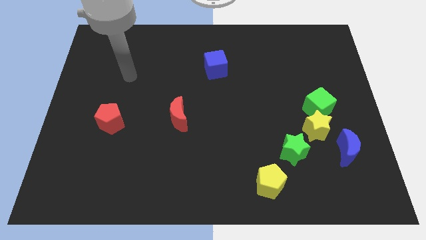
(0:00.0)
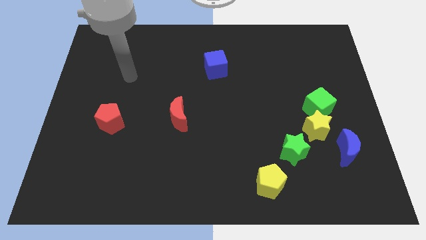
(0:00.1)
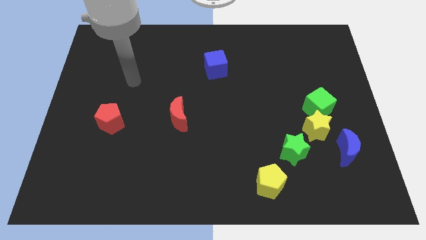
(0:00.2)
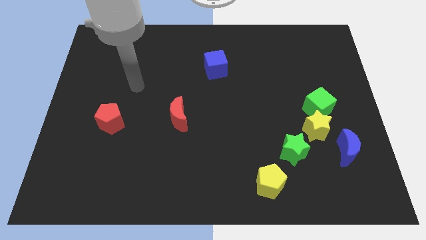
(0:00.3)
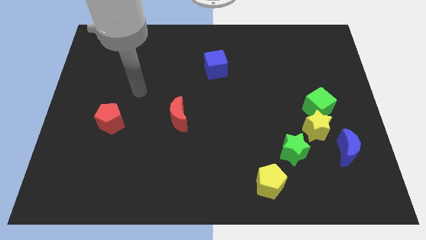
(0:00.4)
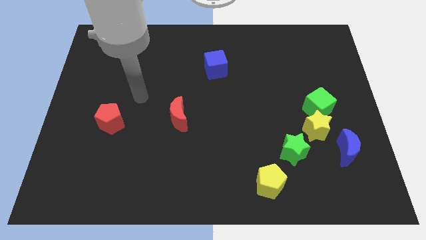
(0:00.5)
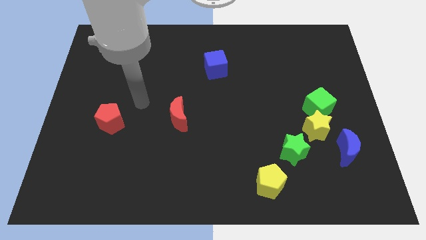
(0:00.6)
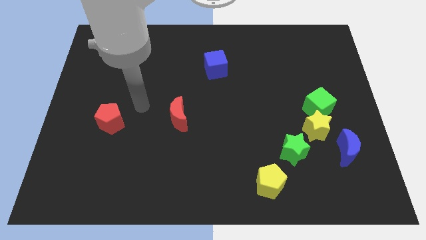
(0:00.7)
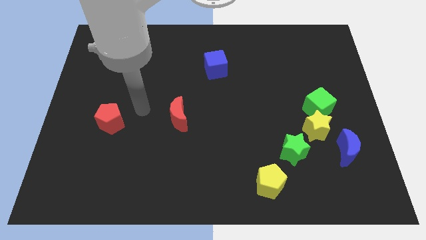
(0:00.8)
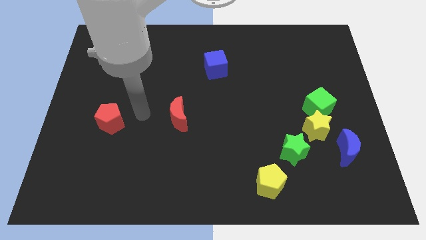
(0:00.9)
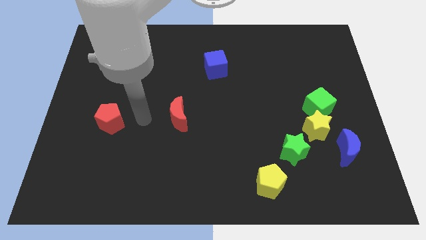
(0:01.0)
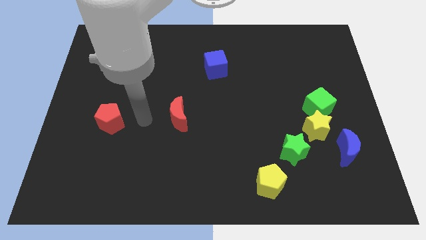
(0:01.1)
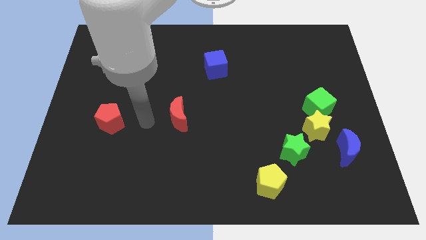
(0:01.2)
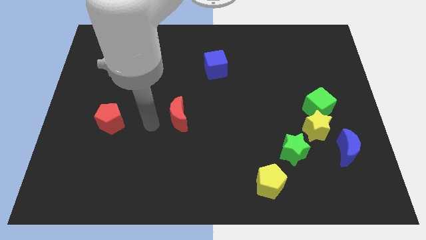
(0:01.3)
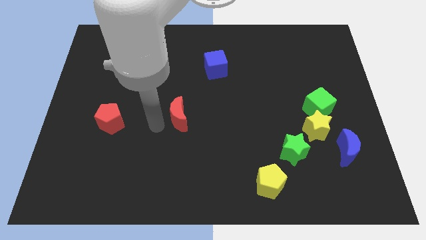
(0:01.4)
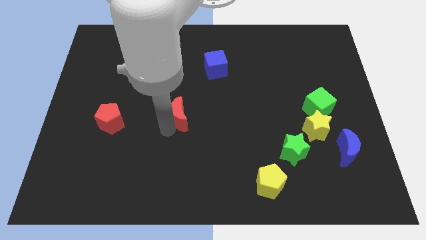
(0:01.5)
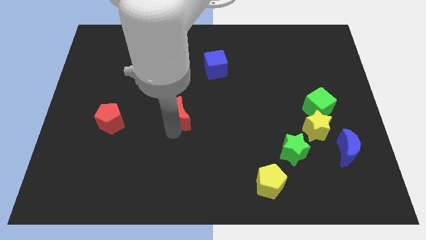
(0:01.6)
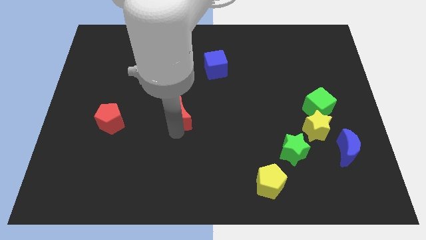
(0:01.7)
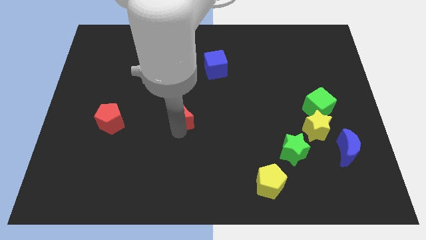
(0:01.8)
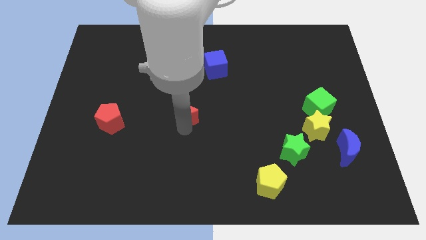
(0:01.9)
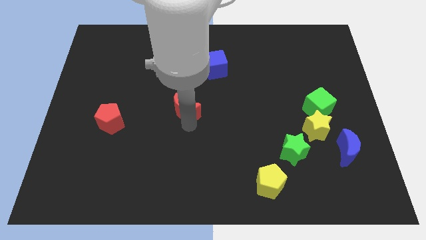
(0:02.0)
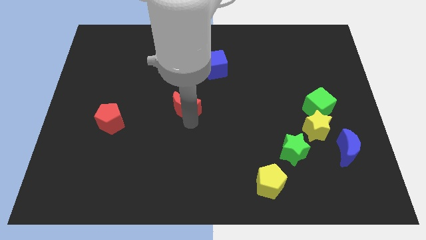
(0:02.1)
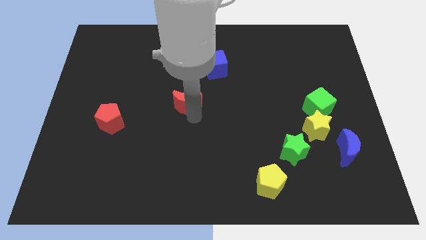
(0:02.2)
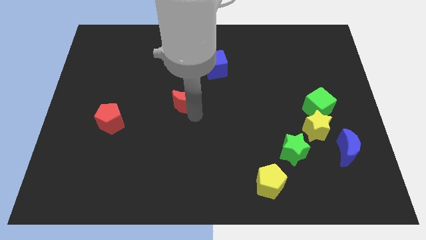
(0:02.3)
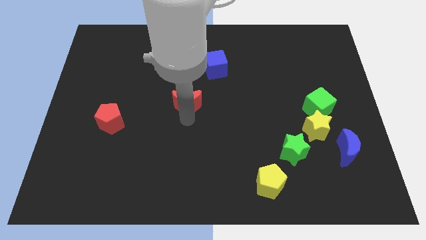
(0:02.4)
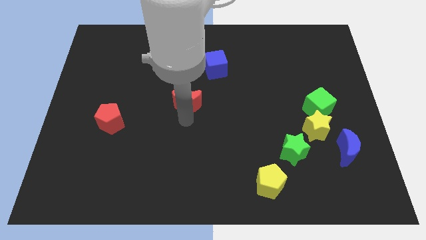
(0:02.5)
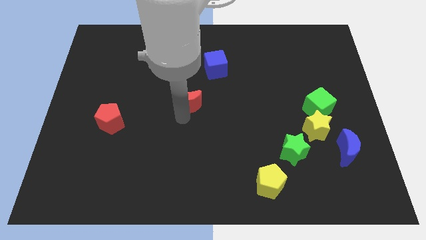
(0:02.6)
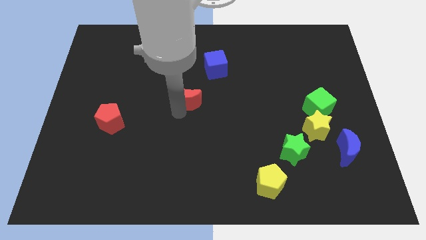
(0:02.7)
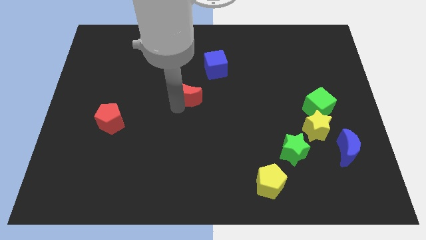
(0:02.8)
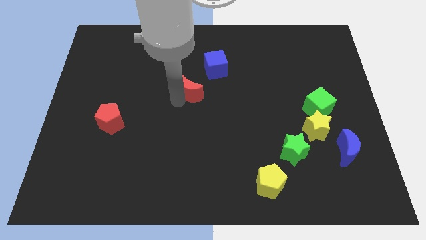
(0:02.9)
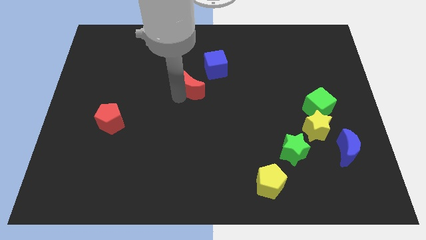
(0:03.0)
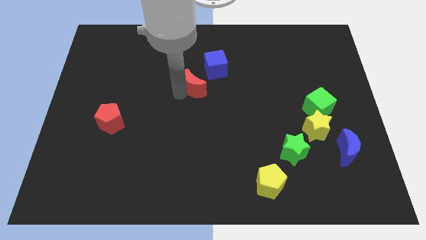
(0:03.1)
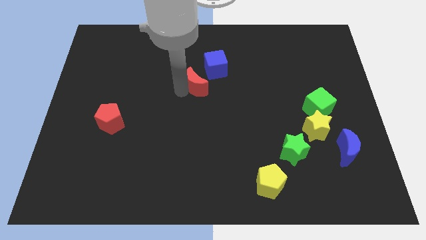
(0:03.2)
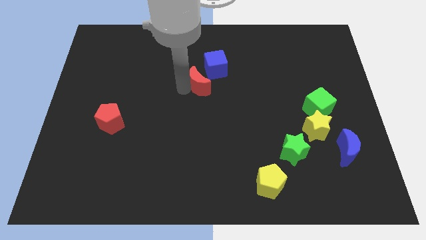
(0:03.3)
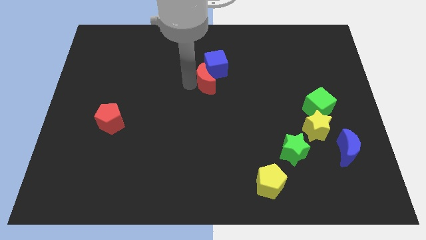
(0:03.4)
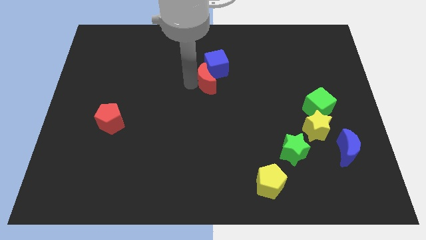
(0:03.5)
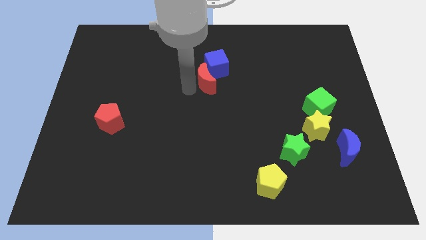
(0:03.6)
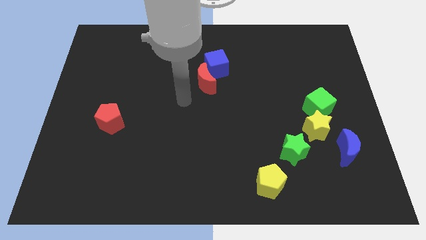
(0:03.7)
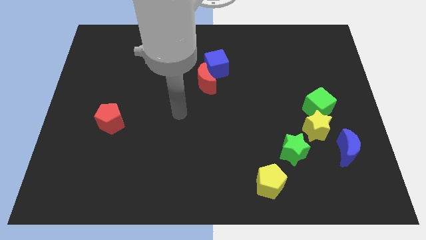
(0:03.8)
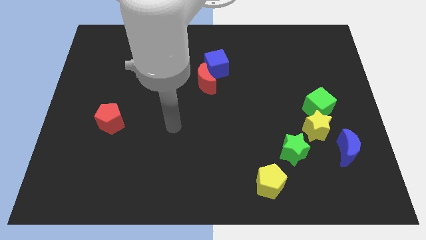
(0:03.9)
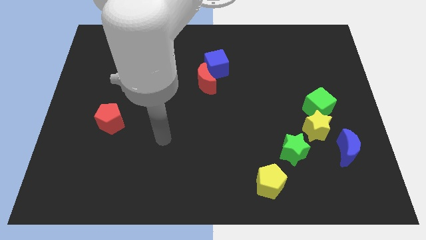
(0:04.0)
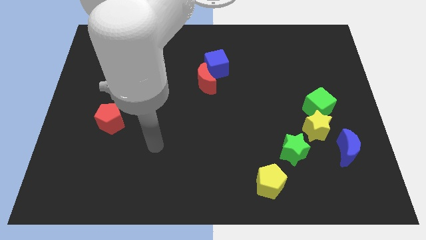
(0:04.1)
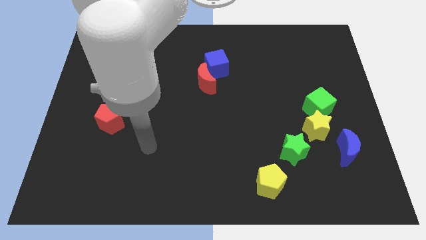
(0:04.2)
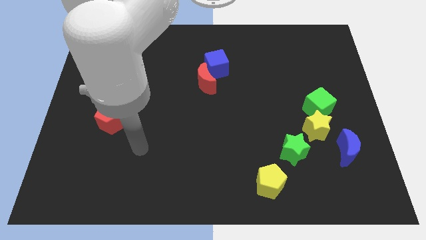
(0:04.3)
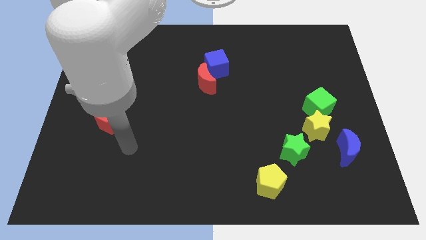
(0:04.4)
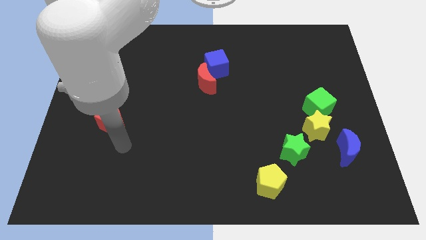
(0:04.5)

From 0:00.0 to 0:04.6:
push the red moon into the blue cube

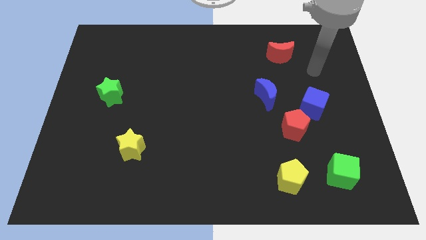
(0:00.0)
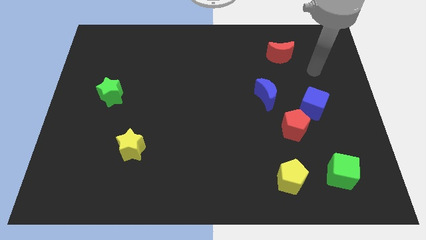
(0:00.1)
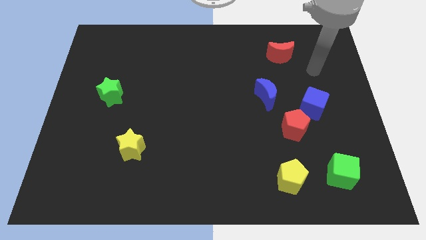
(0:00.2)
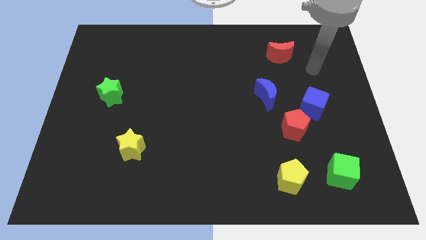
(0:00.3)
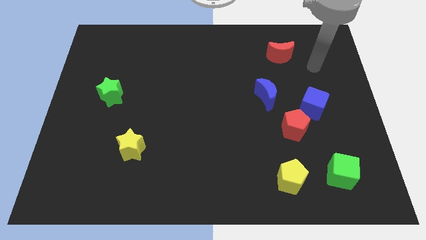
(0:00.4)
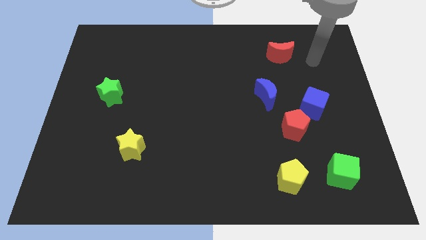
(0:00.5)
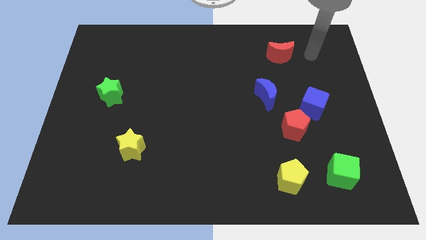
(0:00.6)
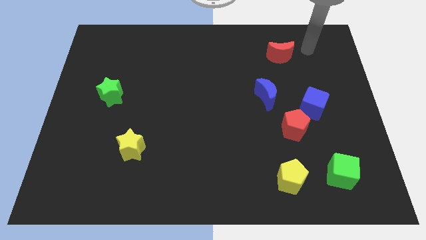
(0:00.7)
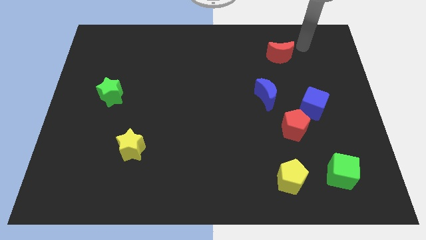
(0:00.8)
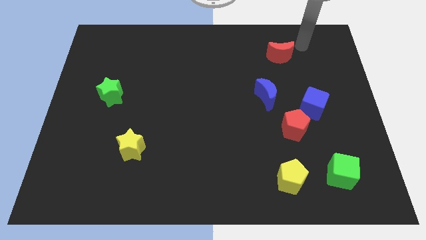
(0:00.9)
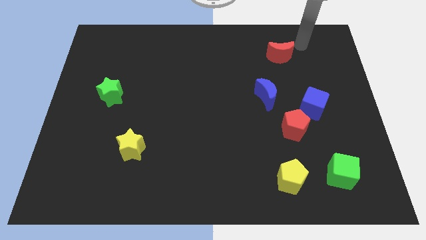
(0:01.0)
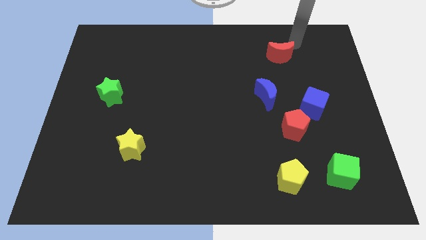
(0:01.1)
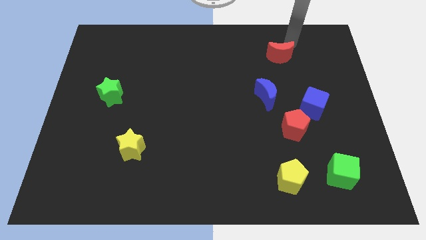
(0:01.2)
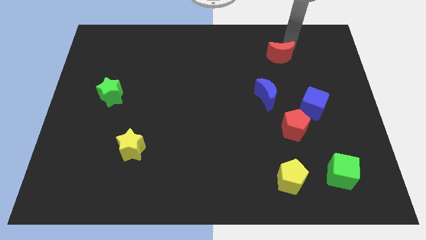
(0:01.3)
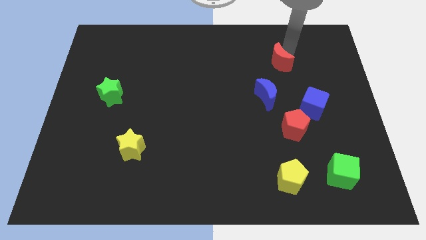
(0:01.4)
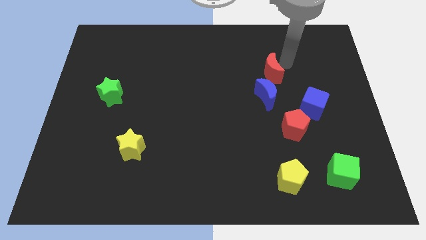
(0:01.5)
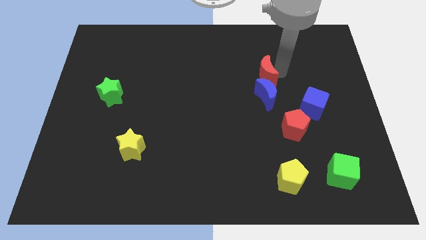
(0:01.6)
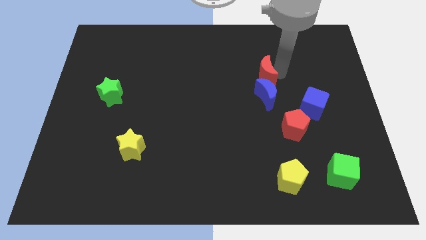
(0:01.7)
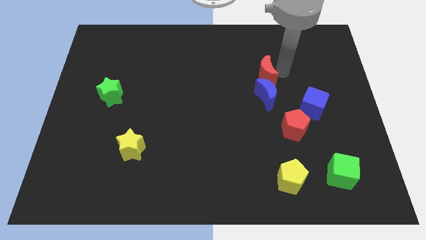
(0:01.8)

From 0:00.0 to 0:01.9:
put the red moon above the blue moon

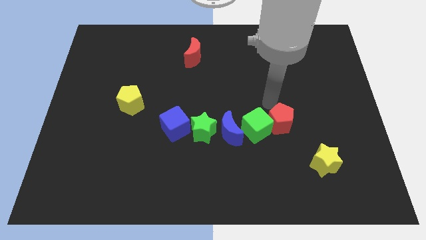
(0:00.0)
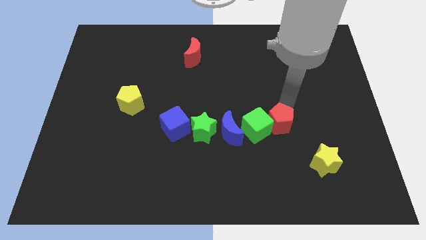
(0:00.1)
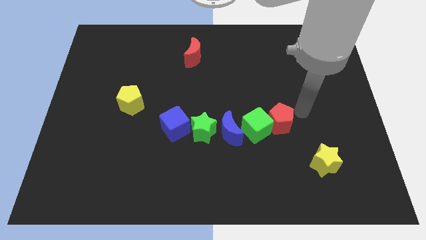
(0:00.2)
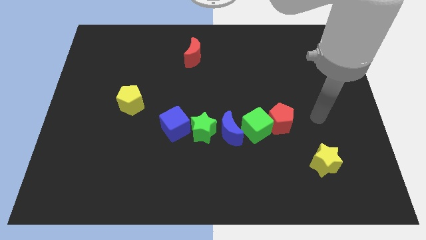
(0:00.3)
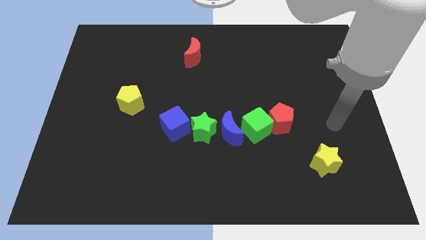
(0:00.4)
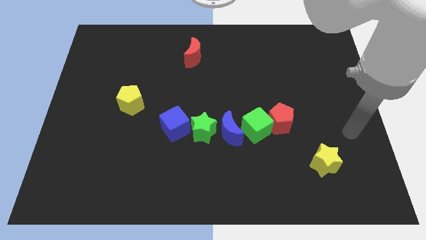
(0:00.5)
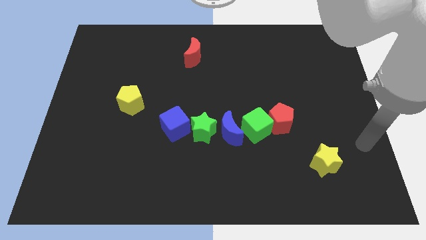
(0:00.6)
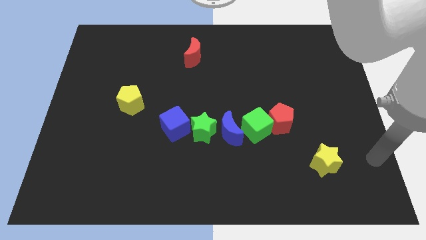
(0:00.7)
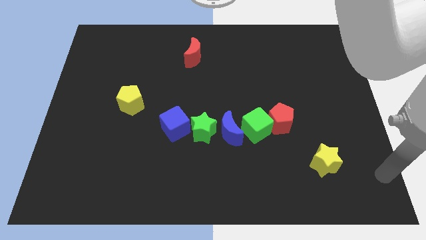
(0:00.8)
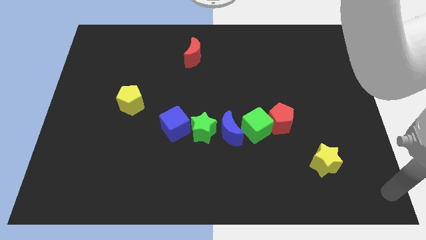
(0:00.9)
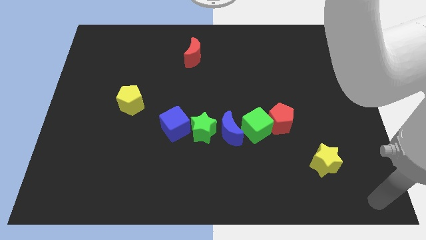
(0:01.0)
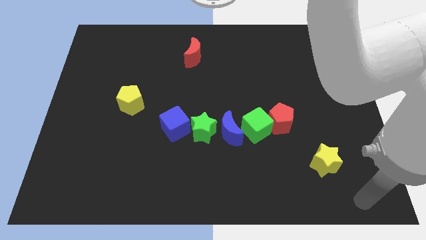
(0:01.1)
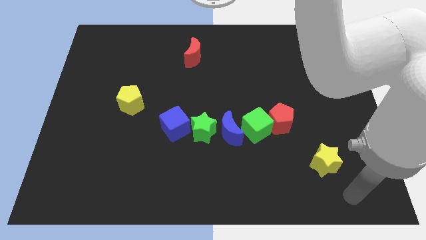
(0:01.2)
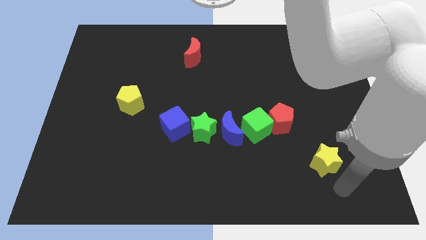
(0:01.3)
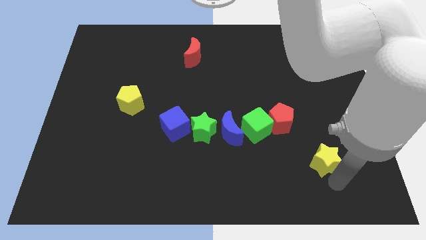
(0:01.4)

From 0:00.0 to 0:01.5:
move the arm to bottom right of the yellow star

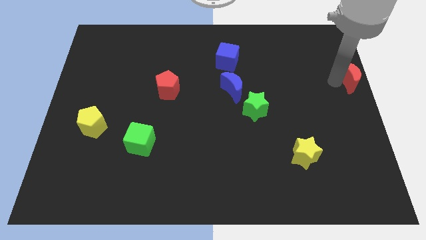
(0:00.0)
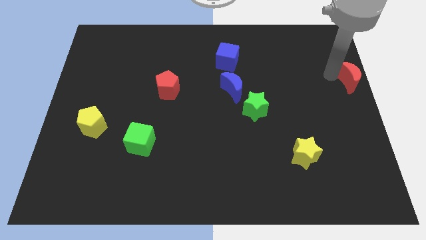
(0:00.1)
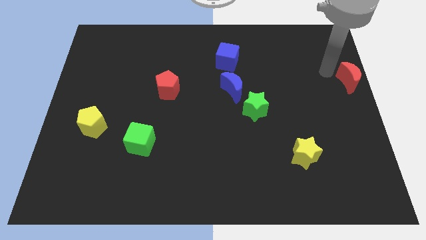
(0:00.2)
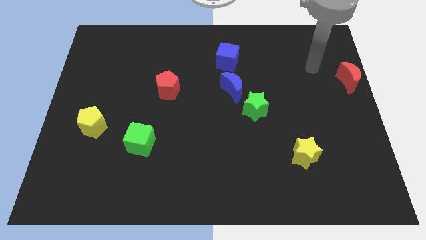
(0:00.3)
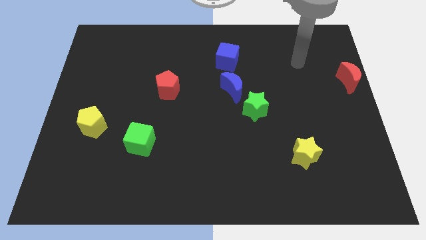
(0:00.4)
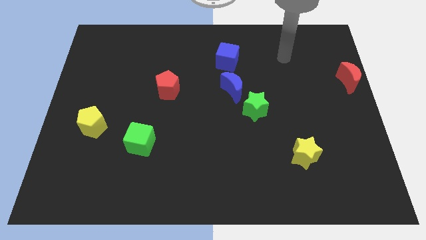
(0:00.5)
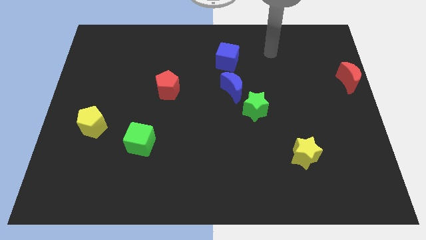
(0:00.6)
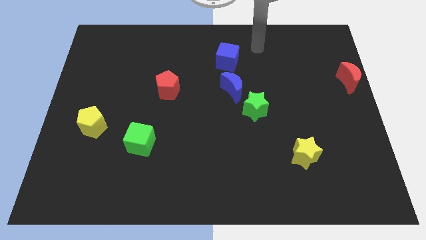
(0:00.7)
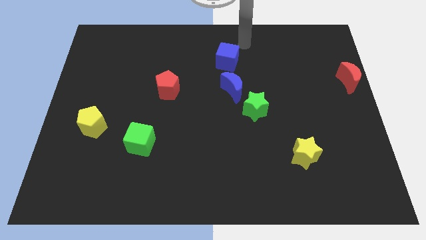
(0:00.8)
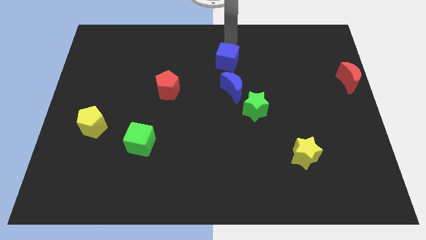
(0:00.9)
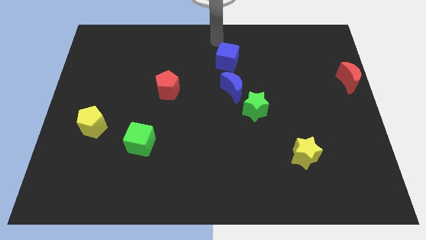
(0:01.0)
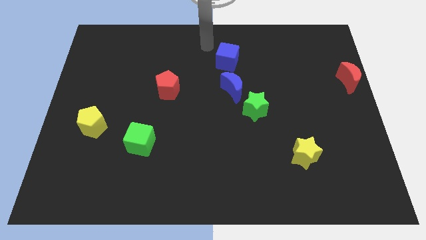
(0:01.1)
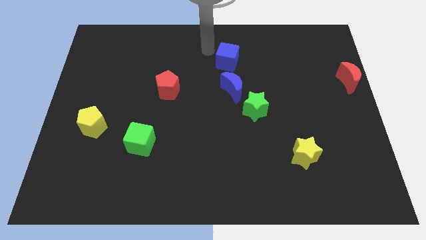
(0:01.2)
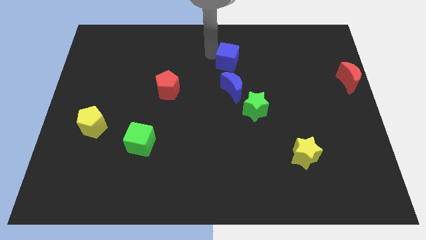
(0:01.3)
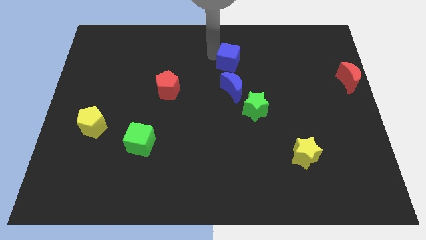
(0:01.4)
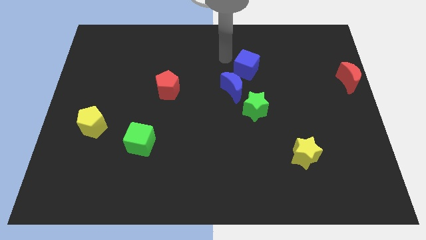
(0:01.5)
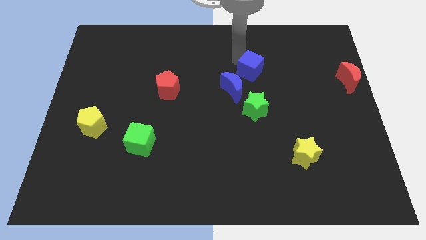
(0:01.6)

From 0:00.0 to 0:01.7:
push the blue cube to the top right of the blue crescent
